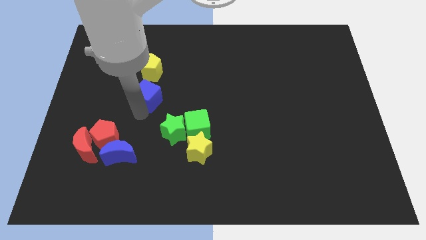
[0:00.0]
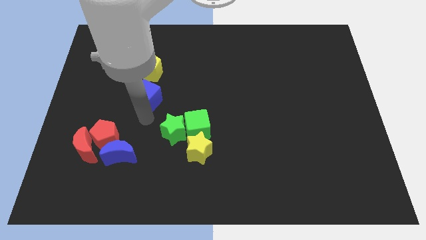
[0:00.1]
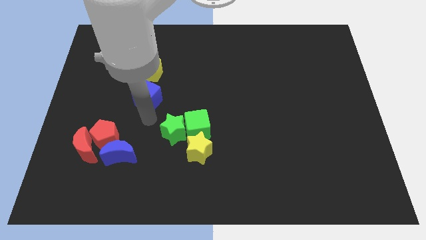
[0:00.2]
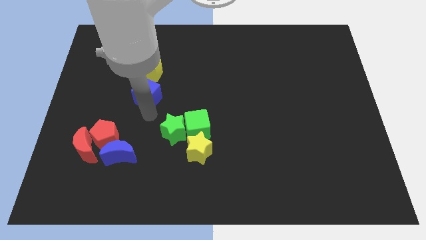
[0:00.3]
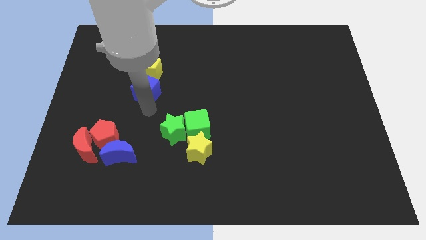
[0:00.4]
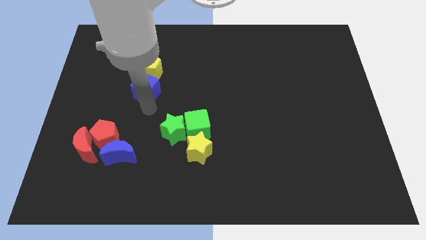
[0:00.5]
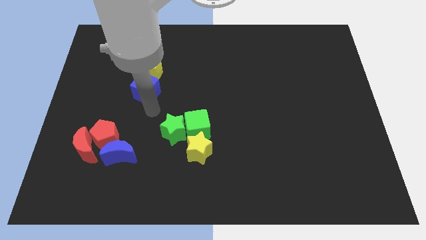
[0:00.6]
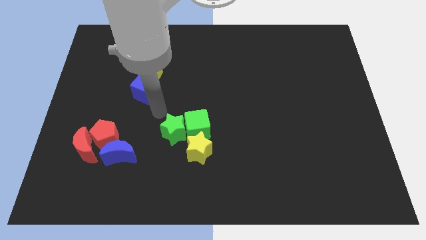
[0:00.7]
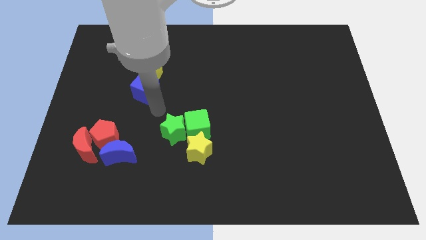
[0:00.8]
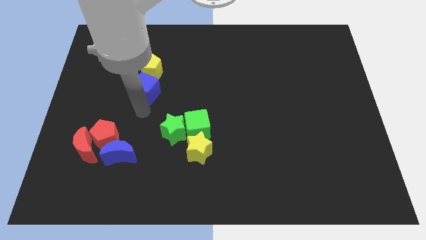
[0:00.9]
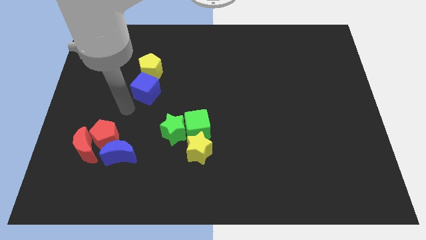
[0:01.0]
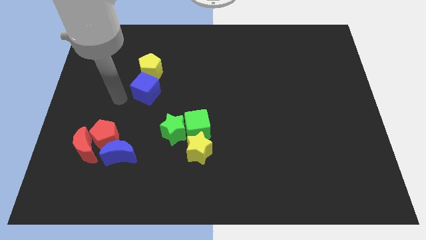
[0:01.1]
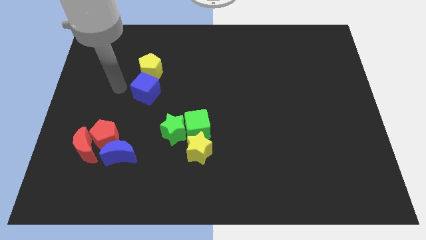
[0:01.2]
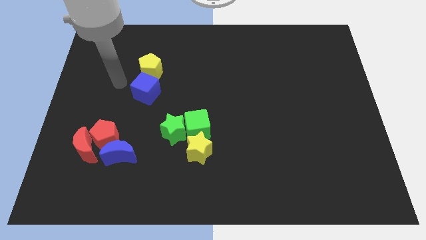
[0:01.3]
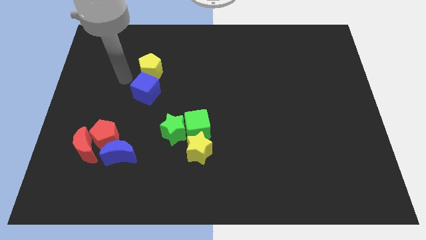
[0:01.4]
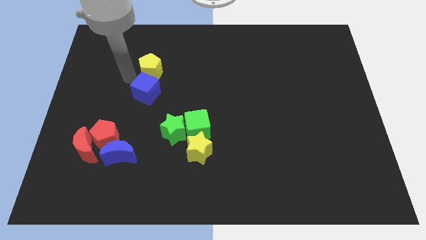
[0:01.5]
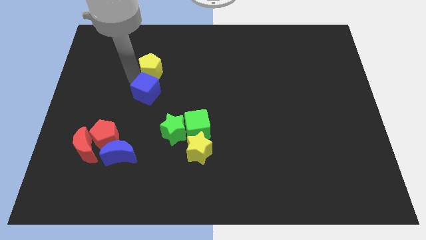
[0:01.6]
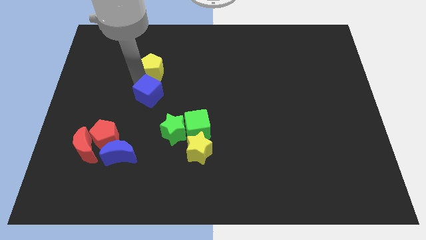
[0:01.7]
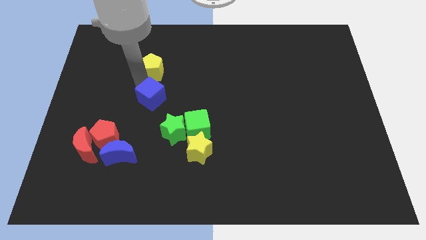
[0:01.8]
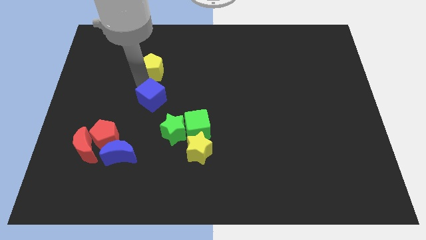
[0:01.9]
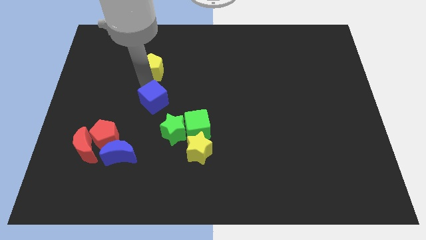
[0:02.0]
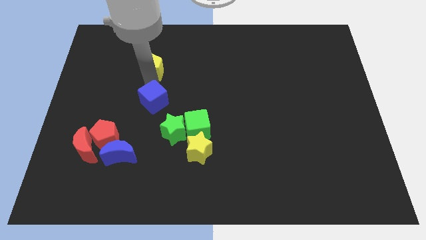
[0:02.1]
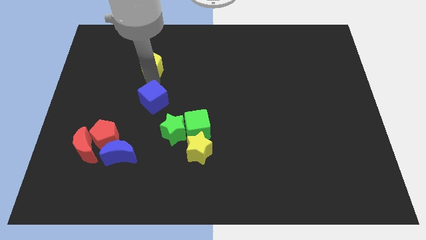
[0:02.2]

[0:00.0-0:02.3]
slightly move the blue cube towards down

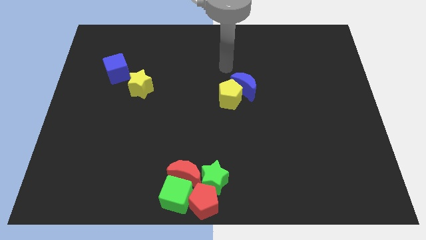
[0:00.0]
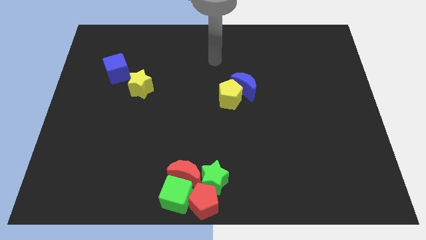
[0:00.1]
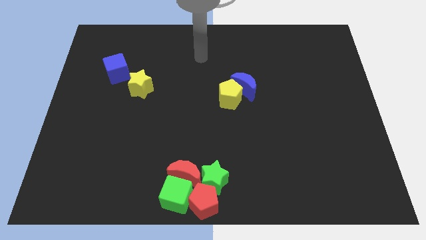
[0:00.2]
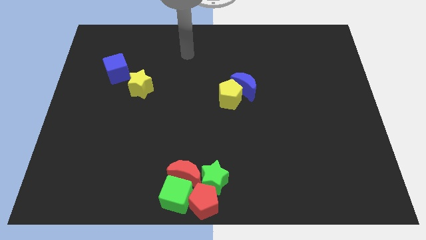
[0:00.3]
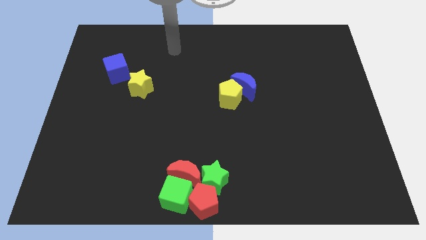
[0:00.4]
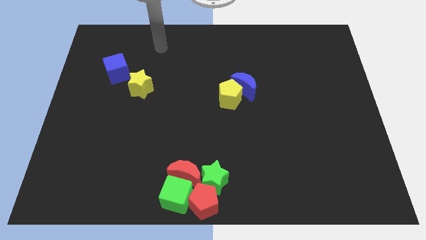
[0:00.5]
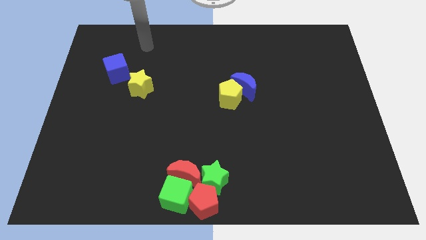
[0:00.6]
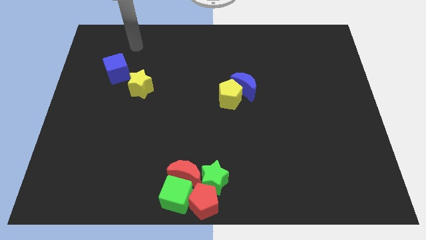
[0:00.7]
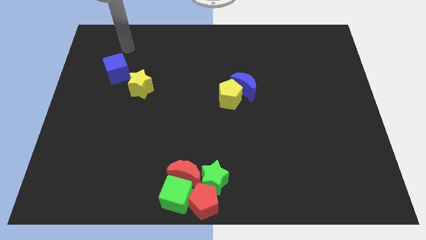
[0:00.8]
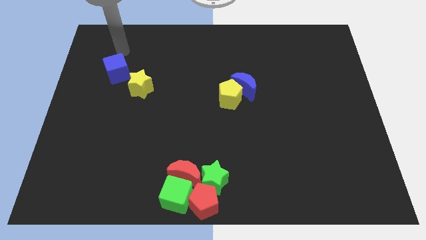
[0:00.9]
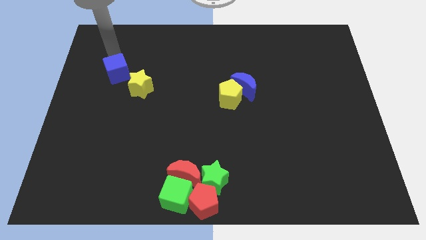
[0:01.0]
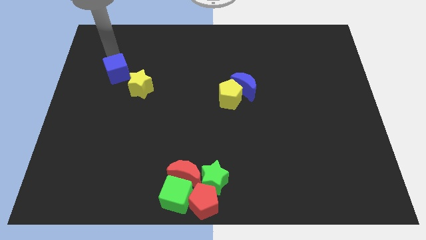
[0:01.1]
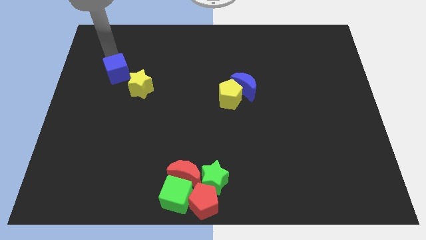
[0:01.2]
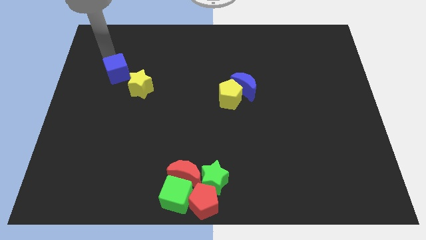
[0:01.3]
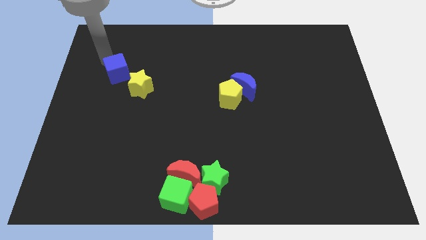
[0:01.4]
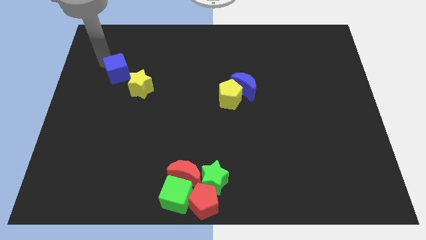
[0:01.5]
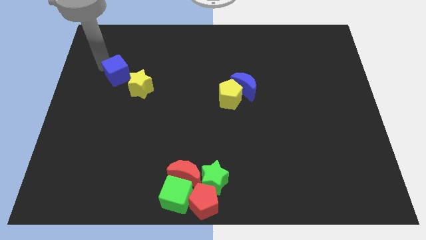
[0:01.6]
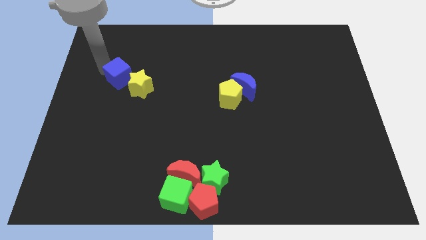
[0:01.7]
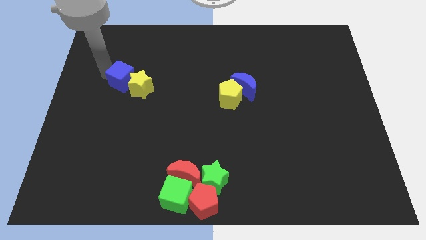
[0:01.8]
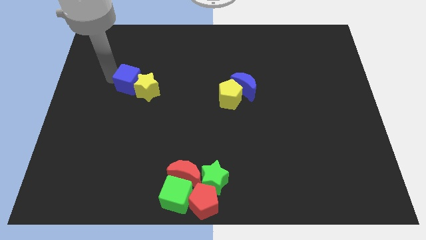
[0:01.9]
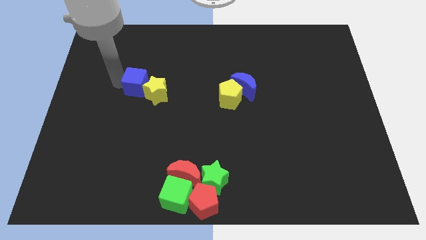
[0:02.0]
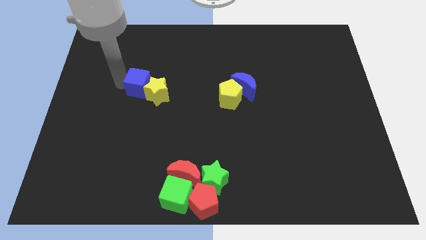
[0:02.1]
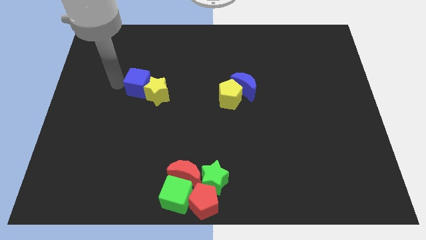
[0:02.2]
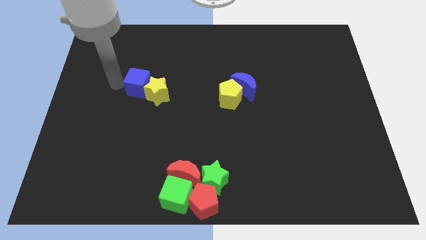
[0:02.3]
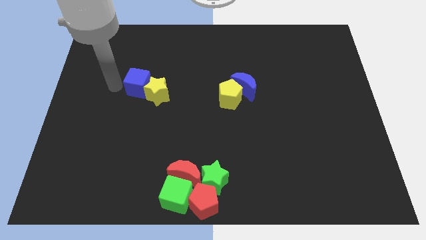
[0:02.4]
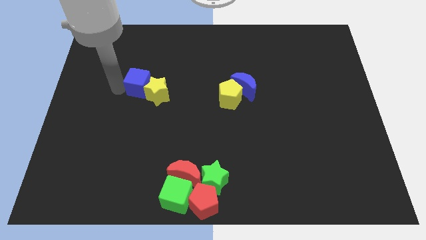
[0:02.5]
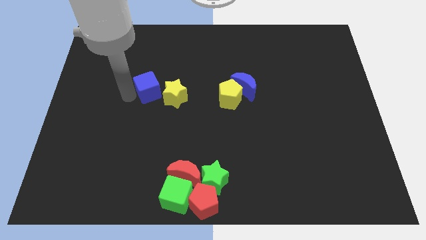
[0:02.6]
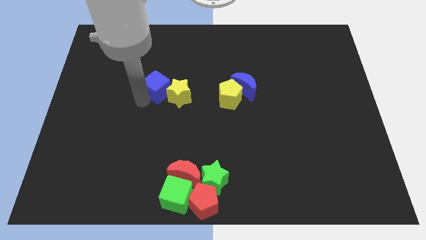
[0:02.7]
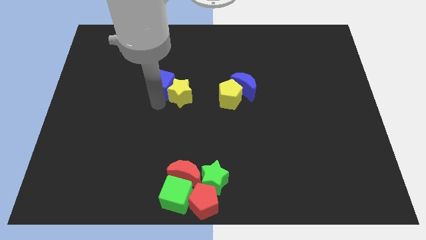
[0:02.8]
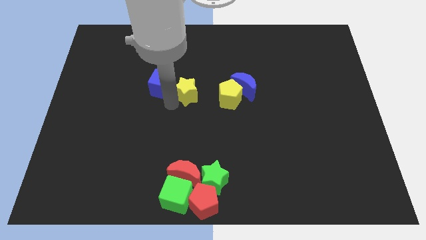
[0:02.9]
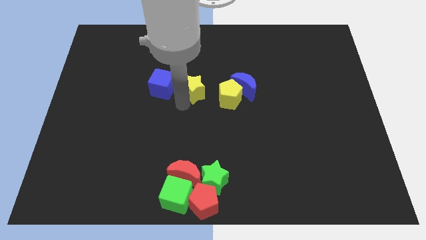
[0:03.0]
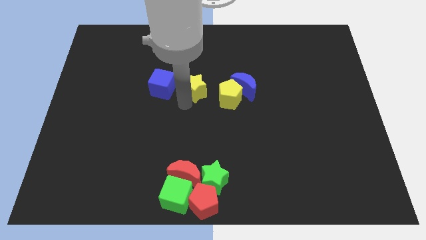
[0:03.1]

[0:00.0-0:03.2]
move the blue cube and yellow star towards the yellow pentagon

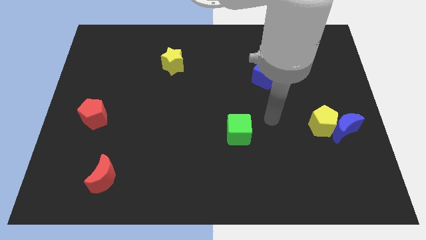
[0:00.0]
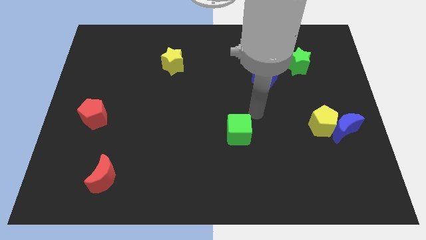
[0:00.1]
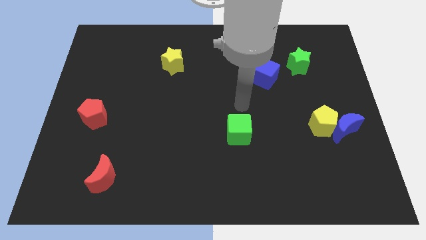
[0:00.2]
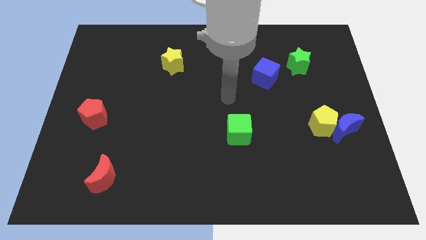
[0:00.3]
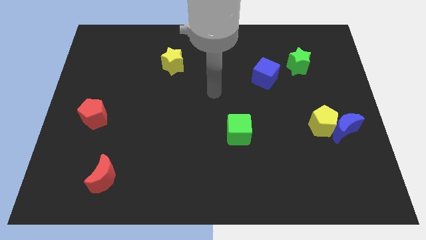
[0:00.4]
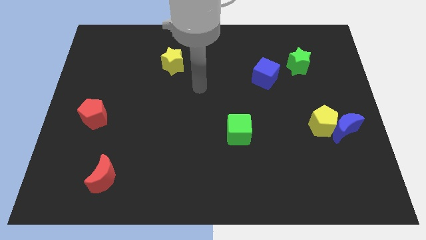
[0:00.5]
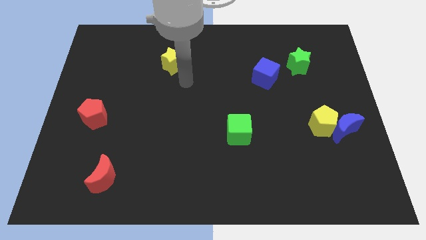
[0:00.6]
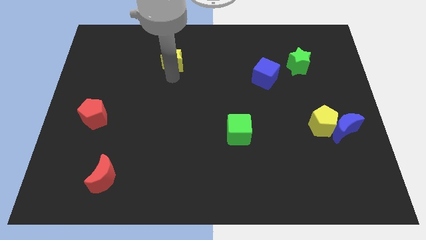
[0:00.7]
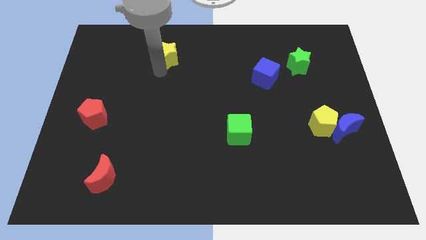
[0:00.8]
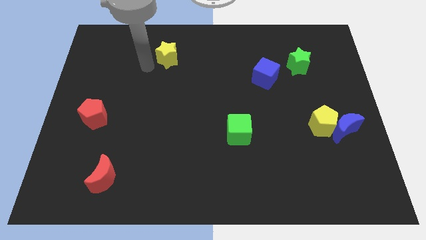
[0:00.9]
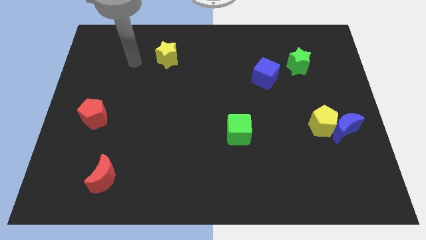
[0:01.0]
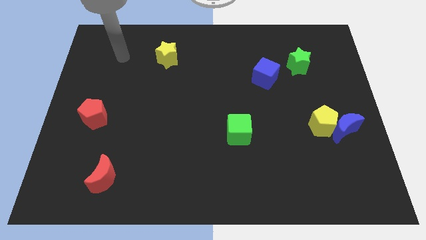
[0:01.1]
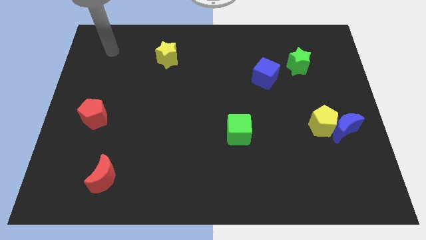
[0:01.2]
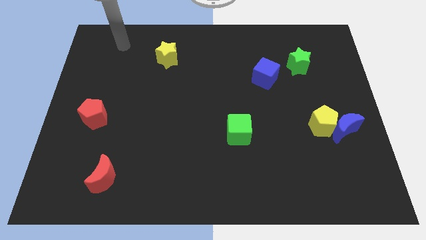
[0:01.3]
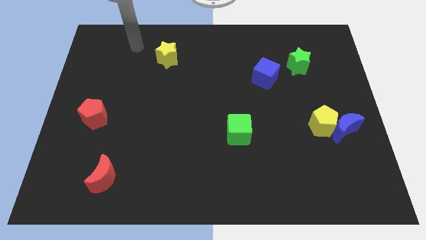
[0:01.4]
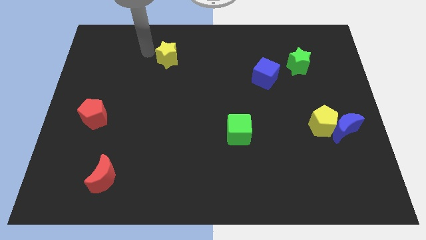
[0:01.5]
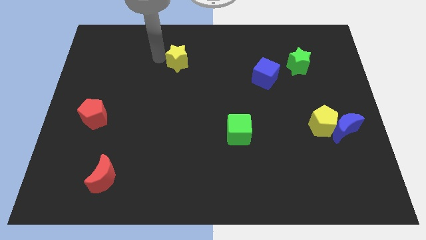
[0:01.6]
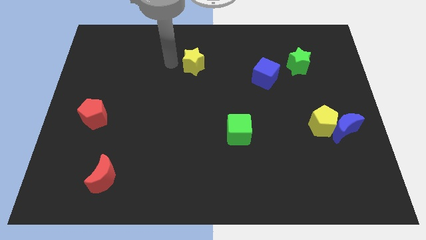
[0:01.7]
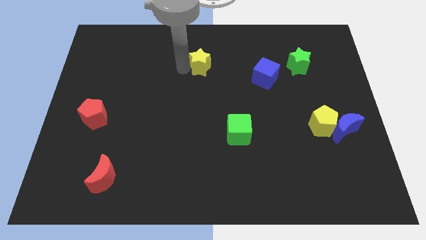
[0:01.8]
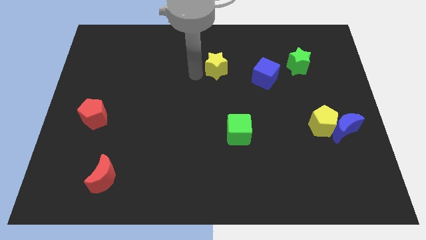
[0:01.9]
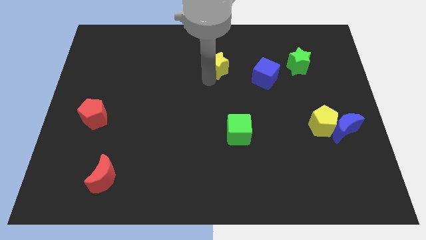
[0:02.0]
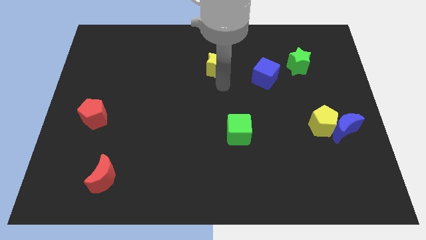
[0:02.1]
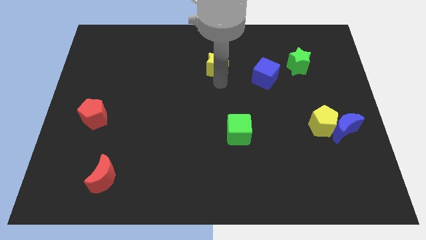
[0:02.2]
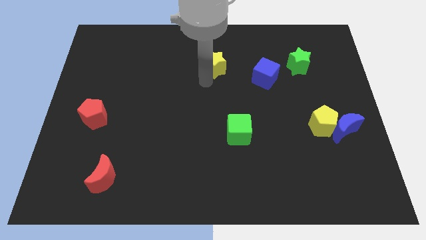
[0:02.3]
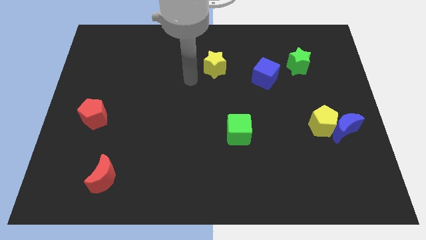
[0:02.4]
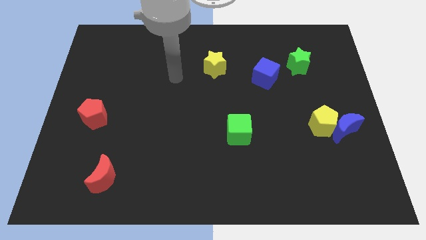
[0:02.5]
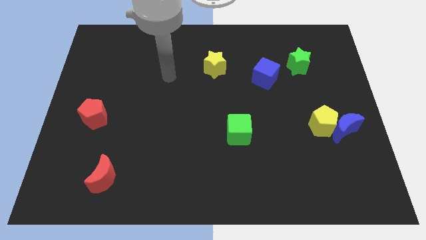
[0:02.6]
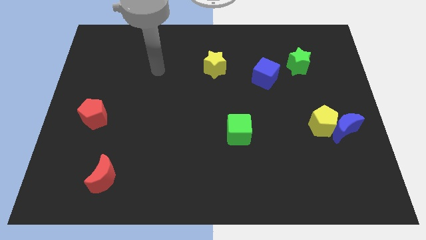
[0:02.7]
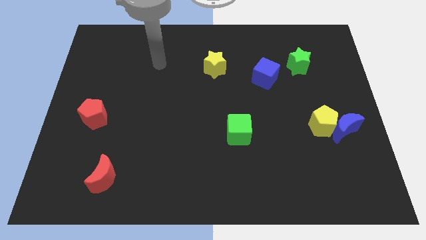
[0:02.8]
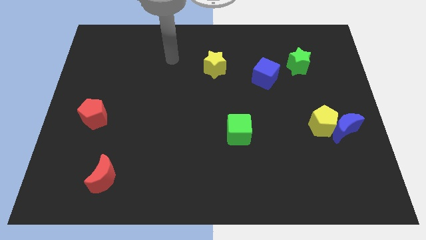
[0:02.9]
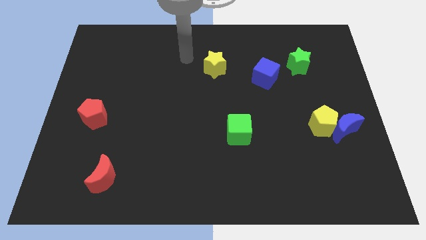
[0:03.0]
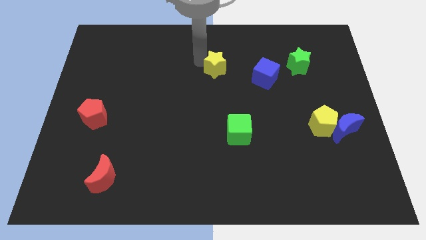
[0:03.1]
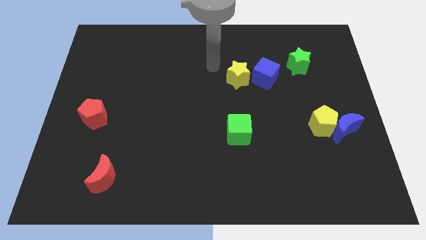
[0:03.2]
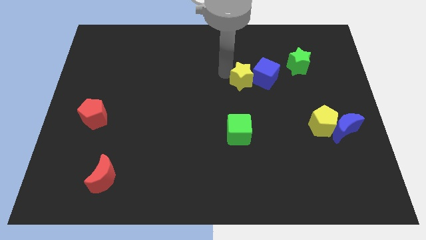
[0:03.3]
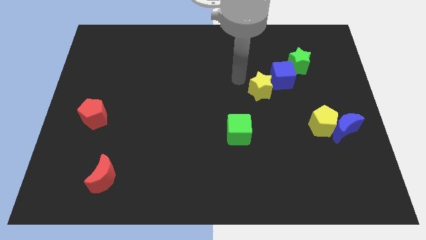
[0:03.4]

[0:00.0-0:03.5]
place the yellow star left to the blue cube
